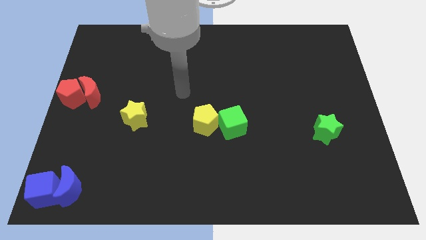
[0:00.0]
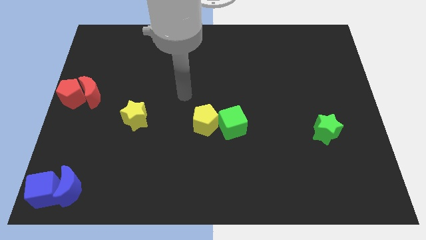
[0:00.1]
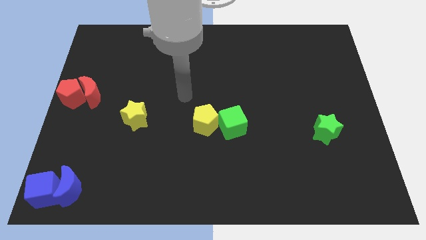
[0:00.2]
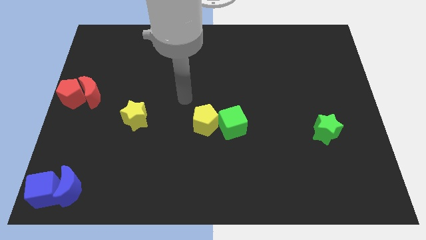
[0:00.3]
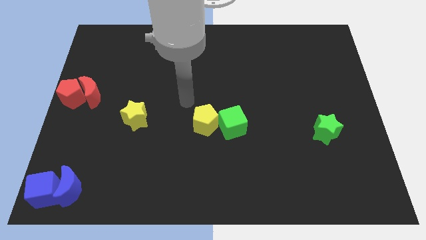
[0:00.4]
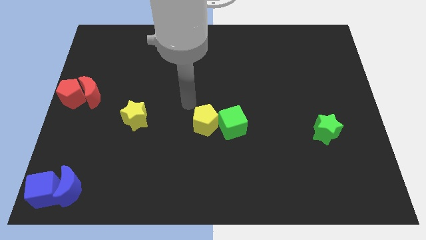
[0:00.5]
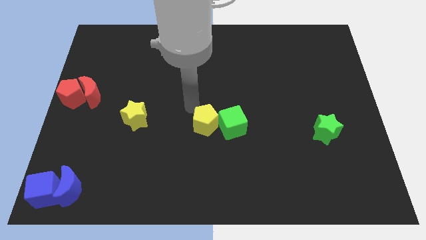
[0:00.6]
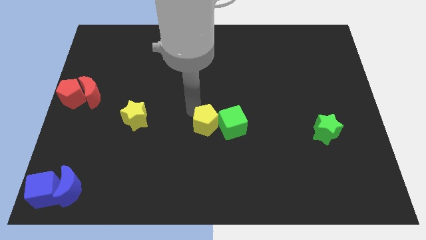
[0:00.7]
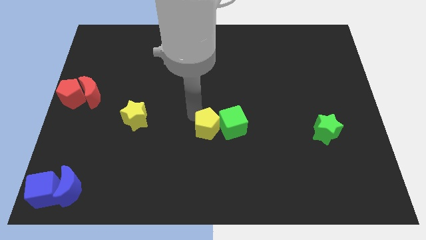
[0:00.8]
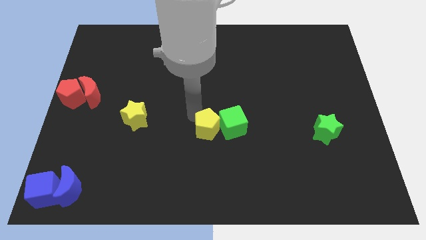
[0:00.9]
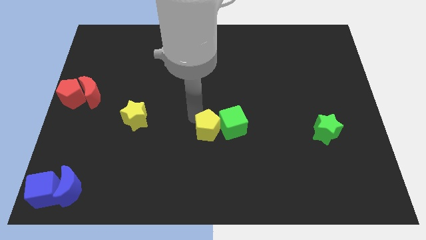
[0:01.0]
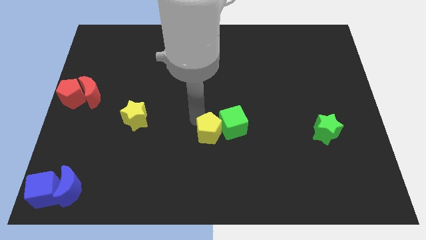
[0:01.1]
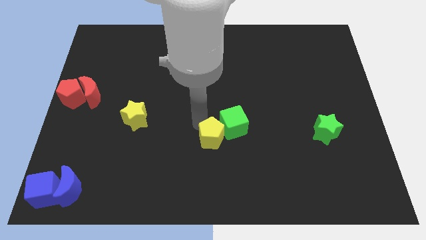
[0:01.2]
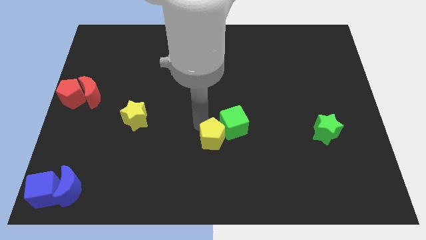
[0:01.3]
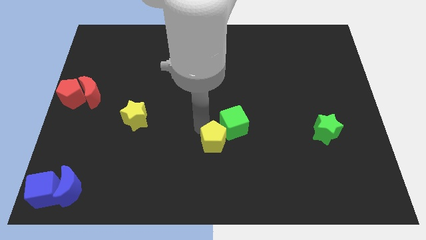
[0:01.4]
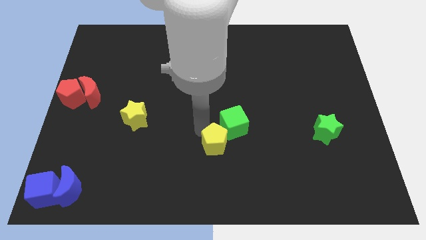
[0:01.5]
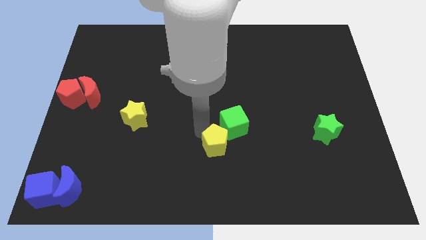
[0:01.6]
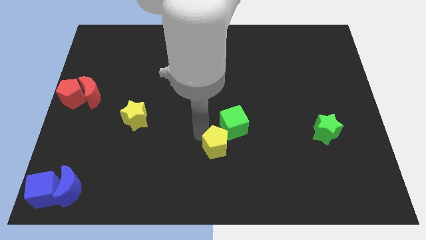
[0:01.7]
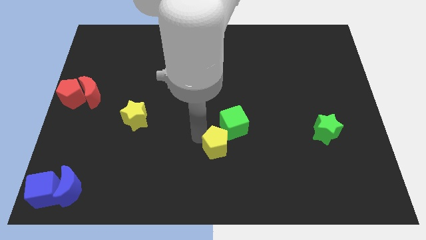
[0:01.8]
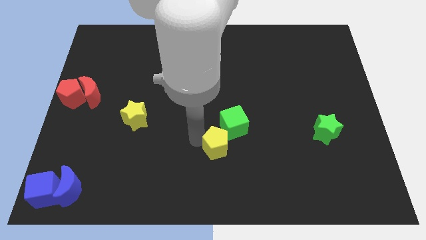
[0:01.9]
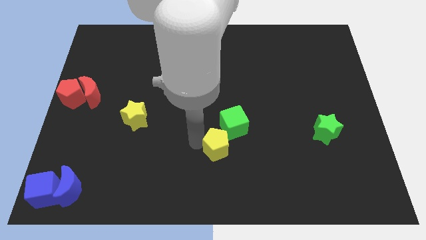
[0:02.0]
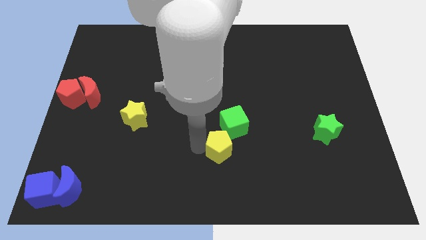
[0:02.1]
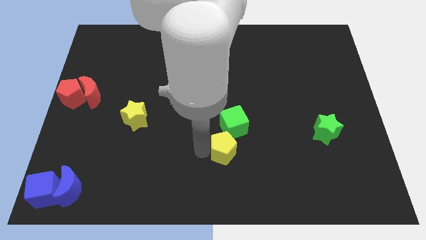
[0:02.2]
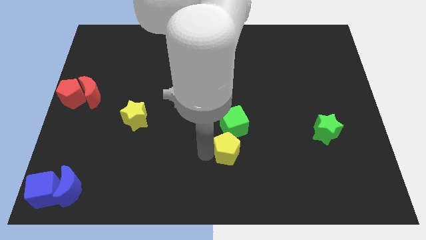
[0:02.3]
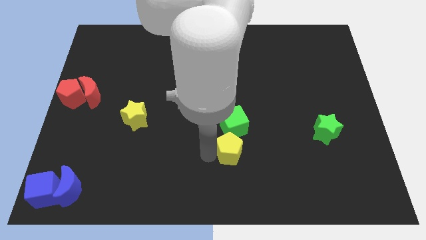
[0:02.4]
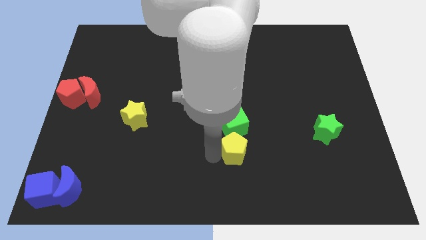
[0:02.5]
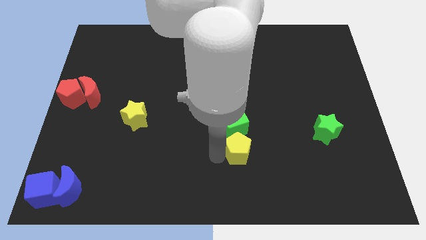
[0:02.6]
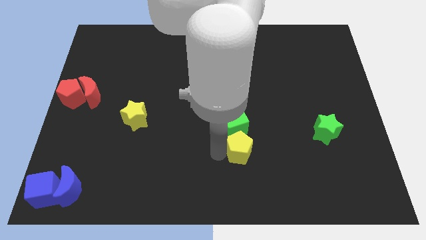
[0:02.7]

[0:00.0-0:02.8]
place the yellow pentagon bottom of green cube

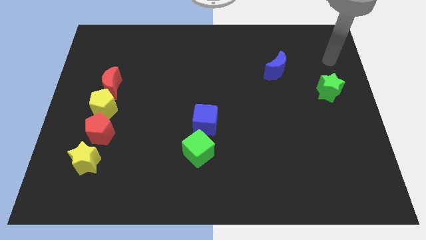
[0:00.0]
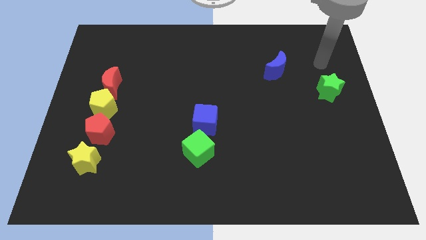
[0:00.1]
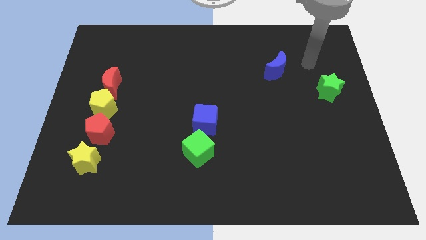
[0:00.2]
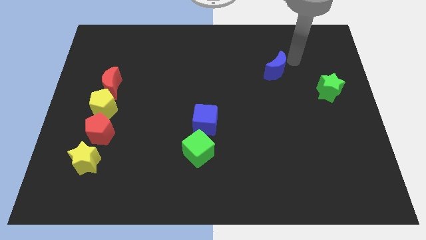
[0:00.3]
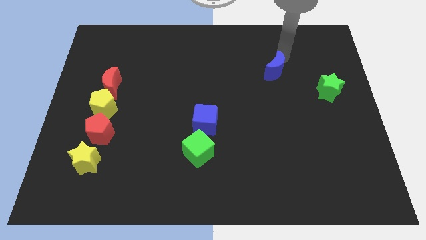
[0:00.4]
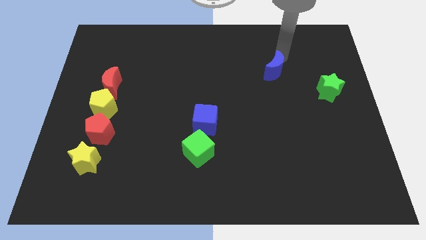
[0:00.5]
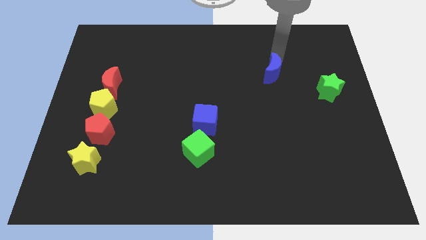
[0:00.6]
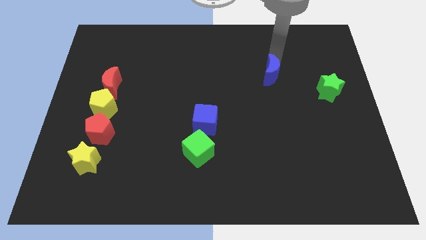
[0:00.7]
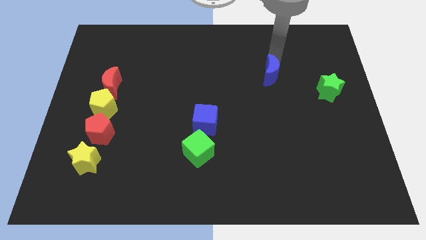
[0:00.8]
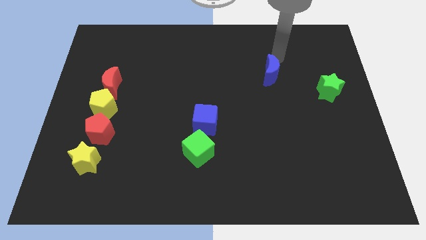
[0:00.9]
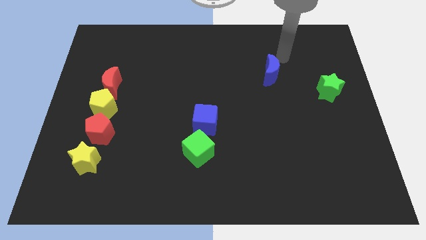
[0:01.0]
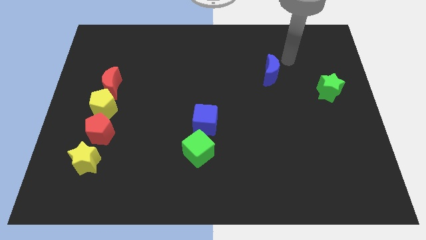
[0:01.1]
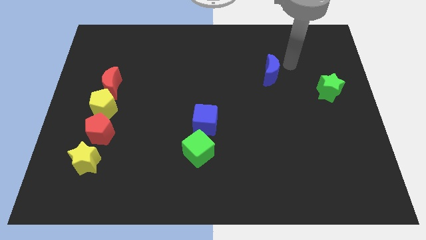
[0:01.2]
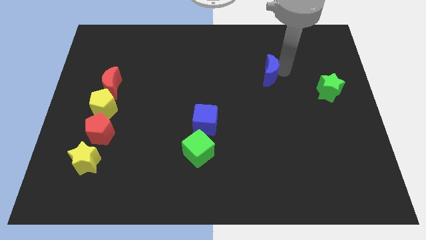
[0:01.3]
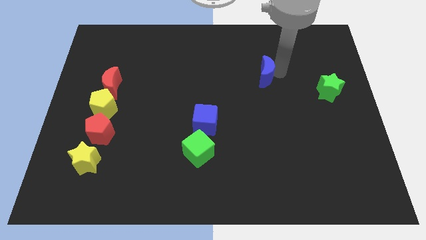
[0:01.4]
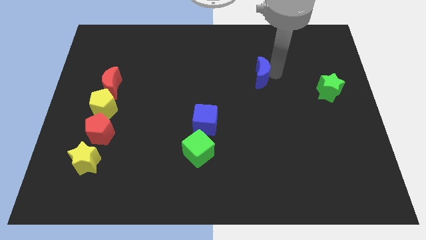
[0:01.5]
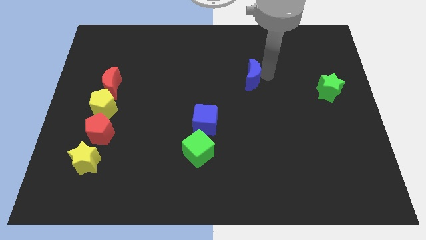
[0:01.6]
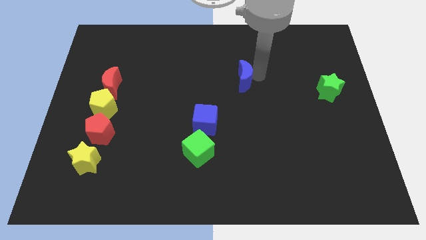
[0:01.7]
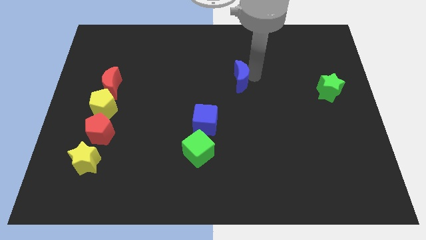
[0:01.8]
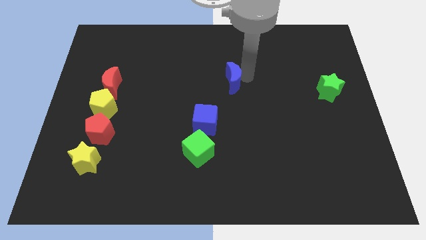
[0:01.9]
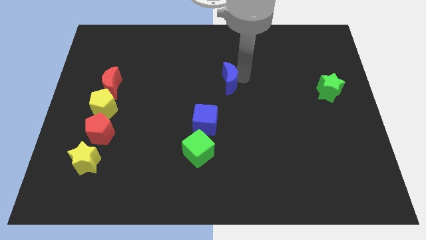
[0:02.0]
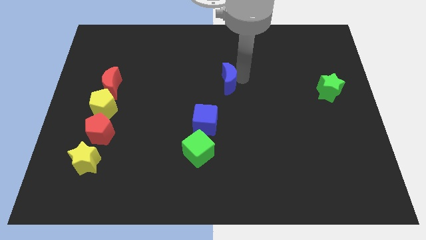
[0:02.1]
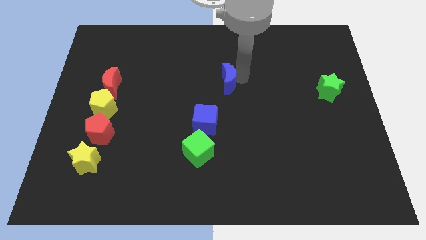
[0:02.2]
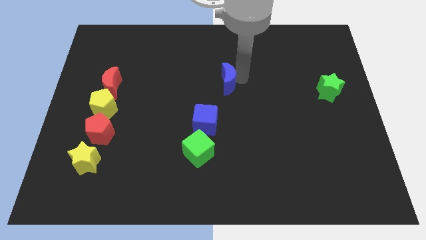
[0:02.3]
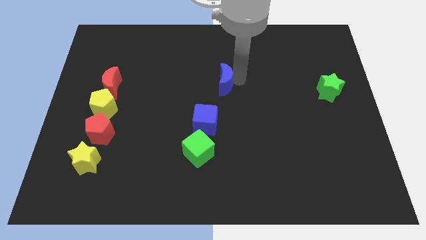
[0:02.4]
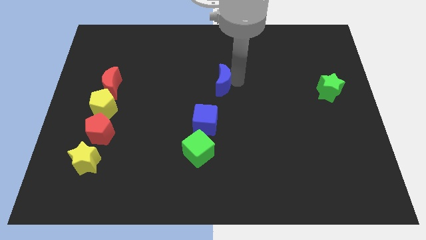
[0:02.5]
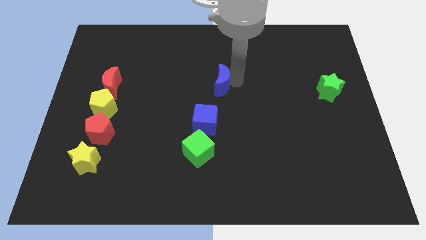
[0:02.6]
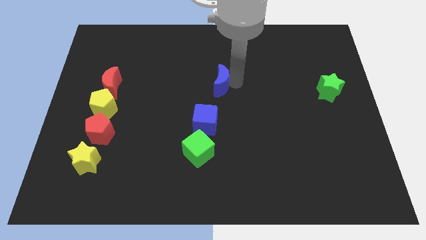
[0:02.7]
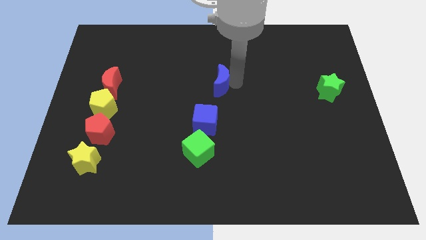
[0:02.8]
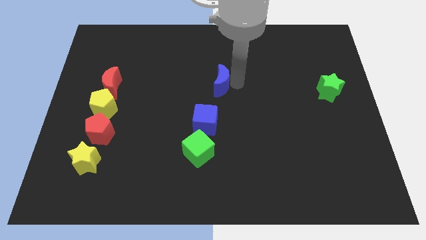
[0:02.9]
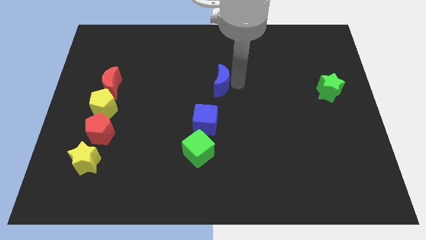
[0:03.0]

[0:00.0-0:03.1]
slide the blue crescent at the upper side of the blue cube

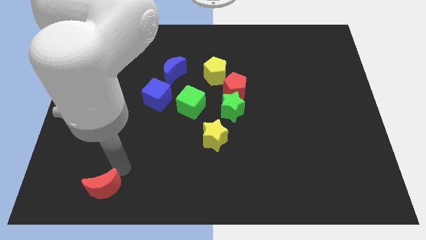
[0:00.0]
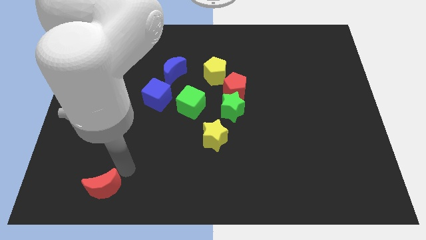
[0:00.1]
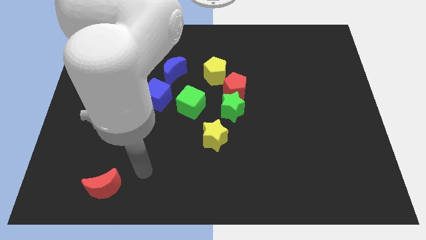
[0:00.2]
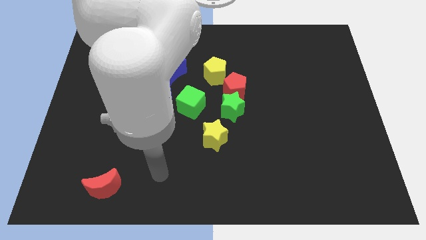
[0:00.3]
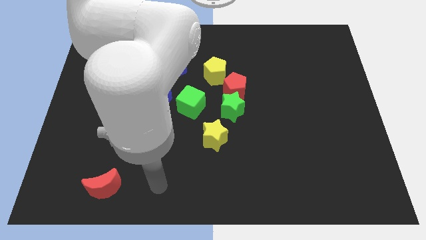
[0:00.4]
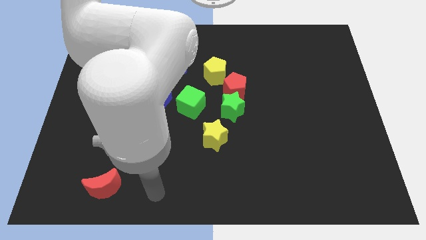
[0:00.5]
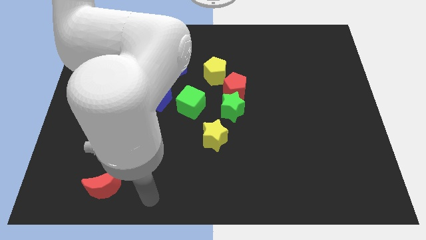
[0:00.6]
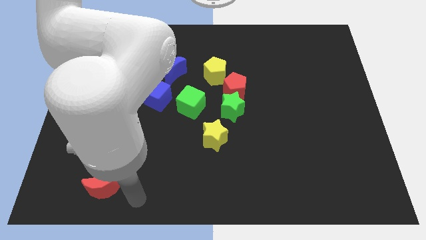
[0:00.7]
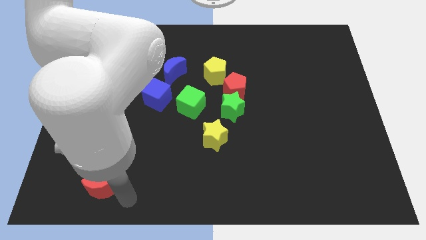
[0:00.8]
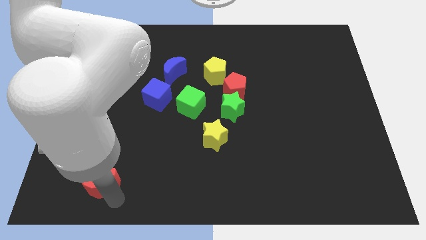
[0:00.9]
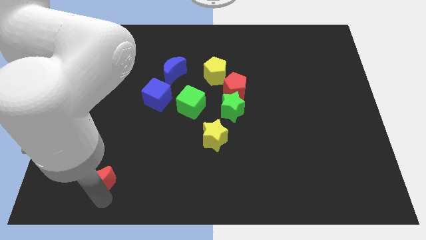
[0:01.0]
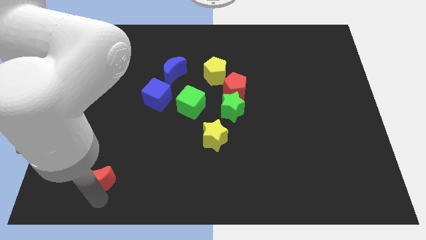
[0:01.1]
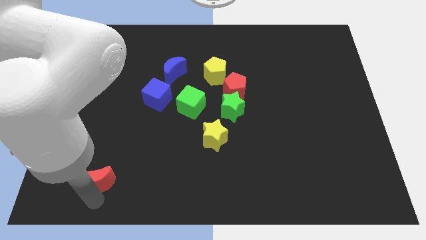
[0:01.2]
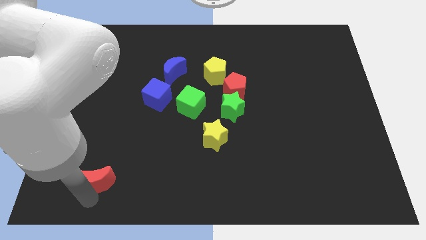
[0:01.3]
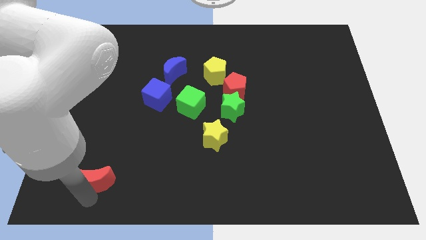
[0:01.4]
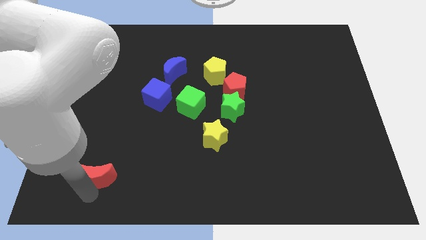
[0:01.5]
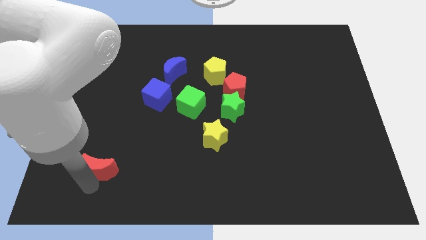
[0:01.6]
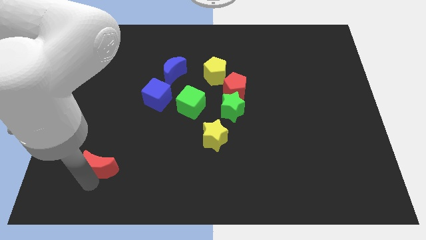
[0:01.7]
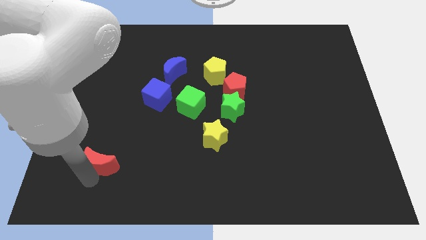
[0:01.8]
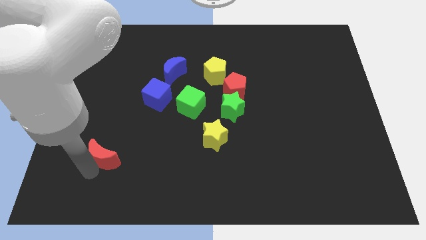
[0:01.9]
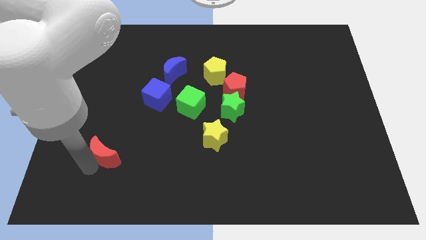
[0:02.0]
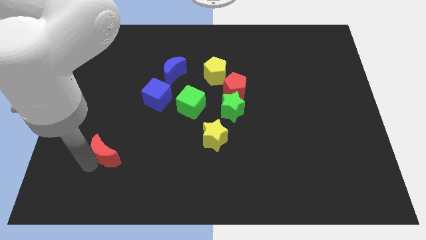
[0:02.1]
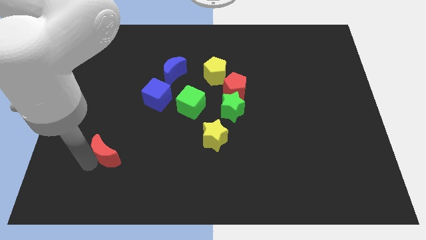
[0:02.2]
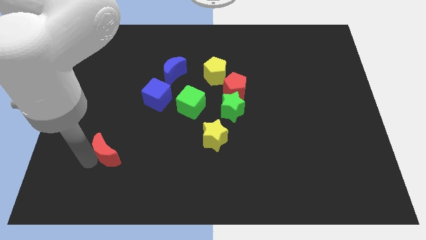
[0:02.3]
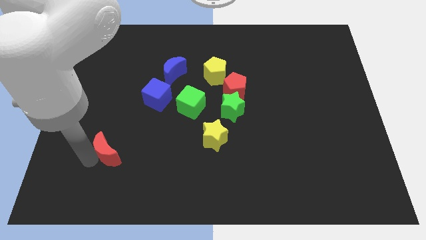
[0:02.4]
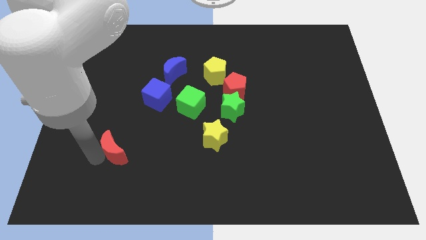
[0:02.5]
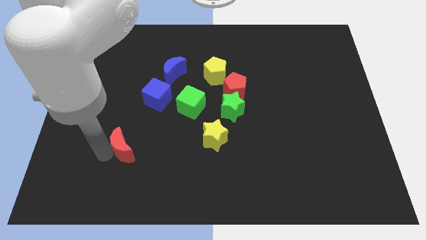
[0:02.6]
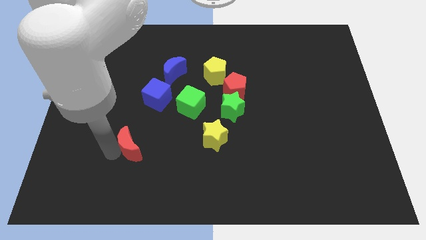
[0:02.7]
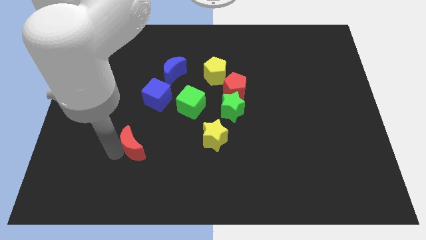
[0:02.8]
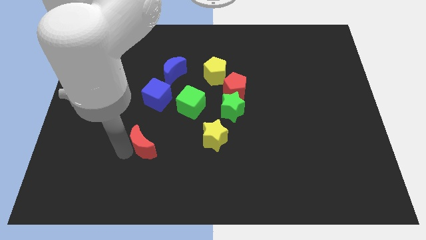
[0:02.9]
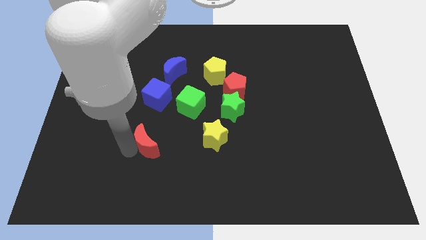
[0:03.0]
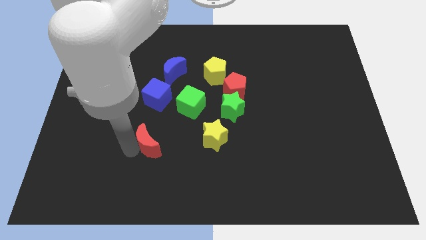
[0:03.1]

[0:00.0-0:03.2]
push red crescent below blue cube
